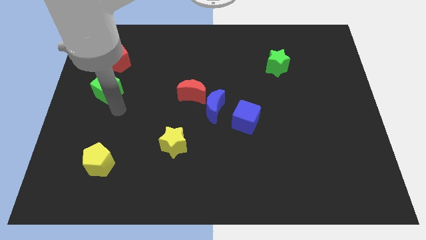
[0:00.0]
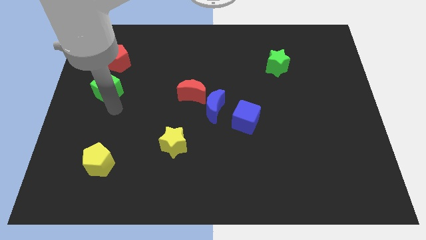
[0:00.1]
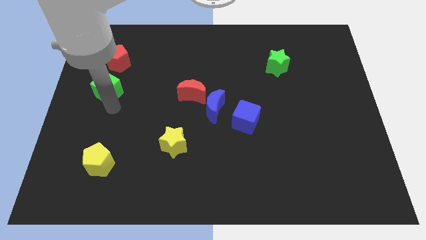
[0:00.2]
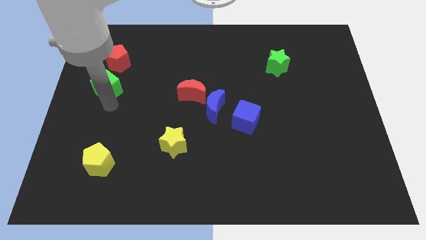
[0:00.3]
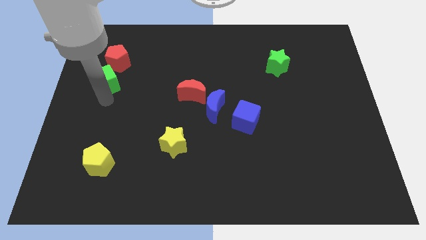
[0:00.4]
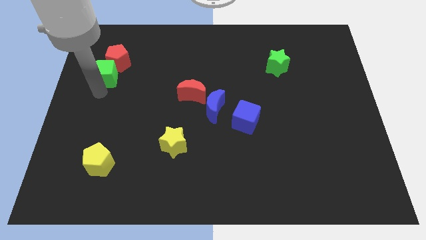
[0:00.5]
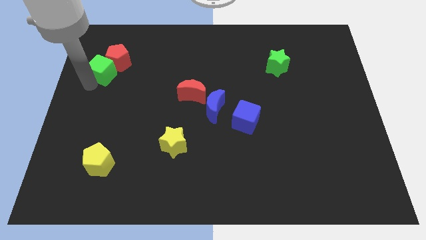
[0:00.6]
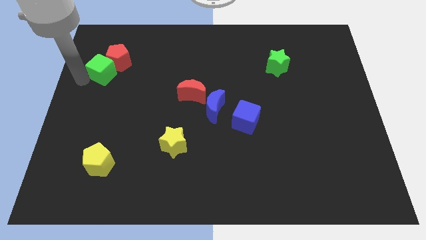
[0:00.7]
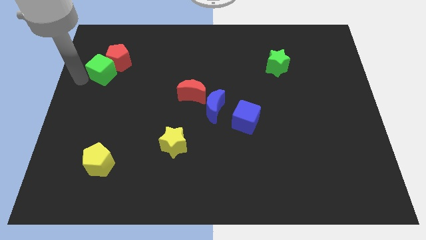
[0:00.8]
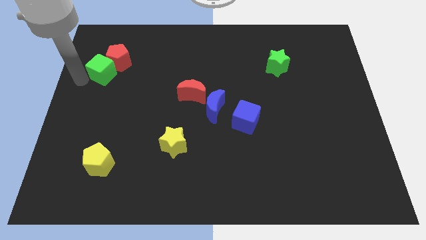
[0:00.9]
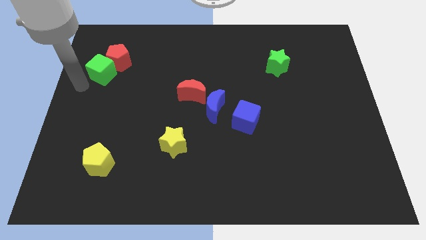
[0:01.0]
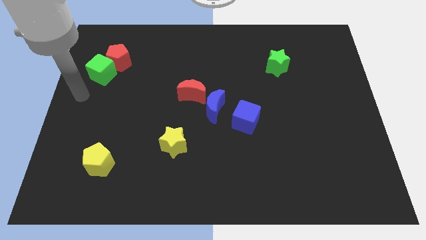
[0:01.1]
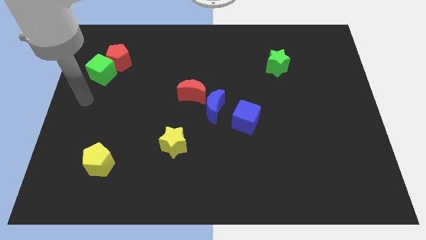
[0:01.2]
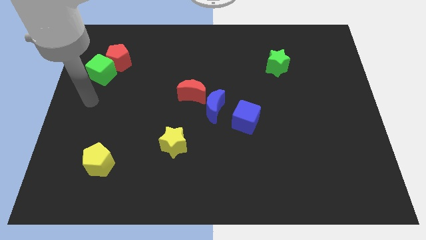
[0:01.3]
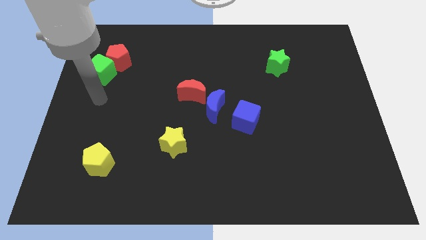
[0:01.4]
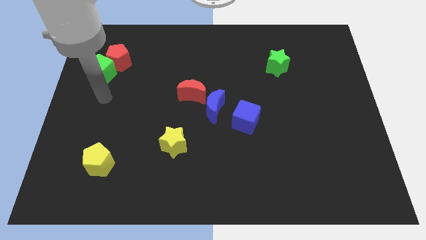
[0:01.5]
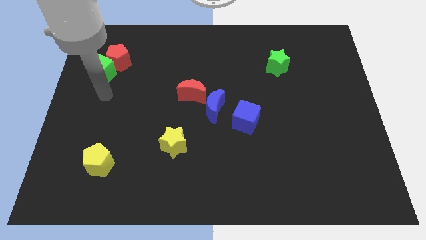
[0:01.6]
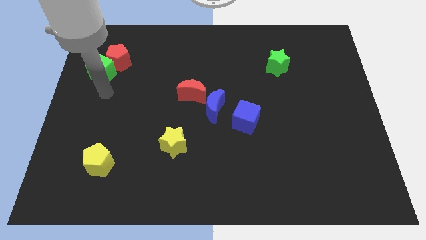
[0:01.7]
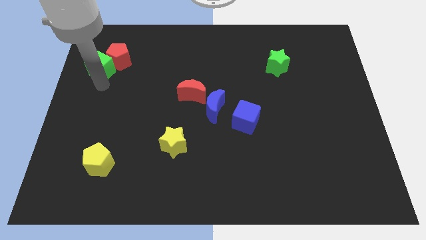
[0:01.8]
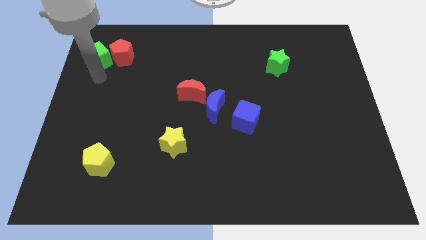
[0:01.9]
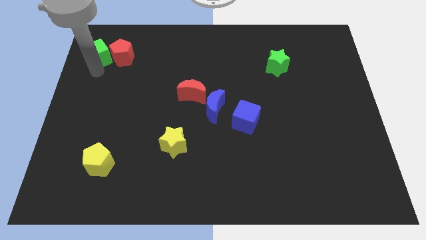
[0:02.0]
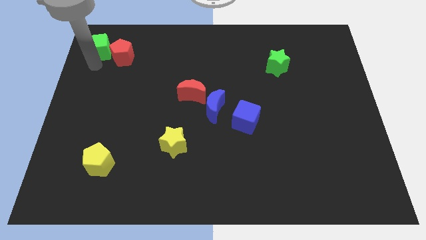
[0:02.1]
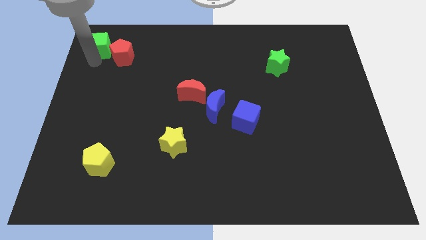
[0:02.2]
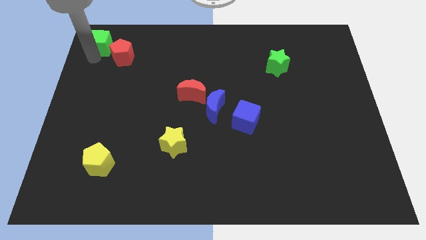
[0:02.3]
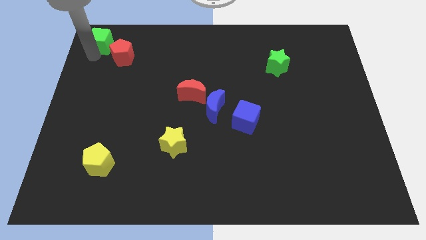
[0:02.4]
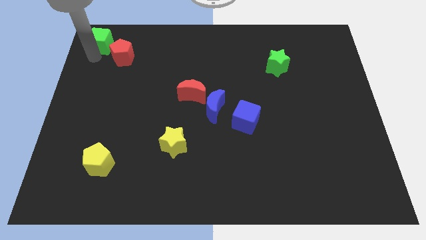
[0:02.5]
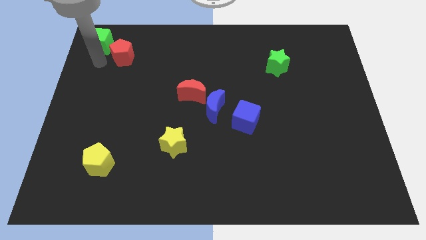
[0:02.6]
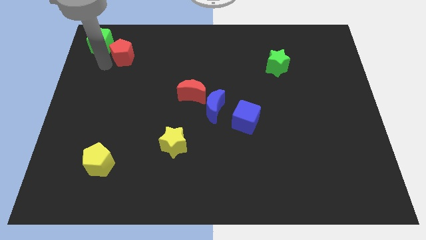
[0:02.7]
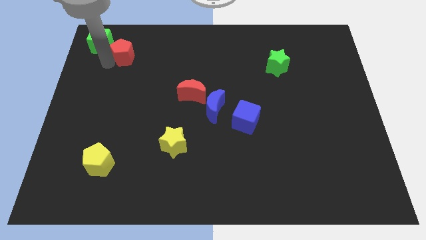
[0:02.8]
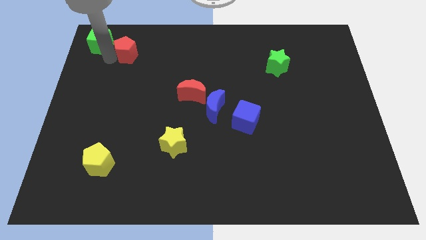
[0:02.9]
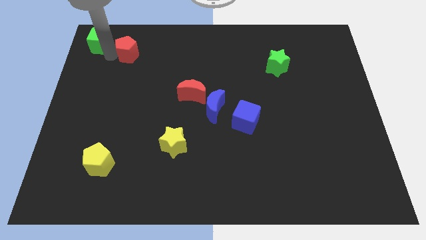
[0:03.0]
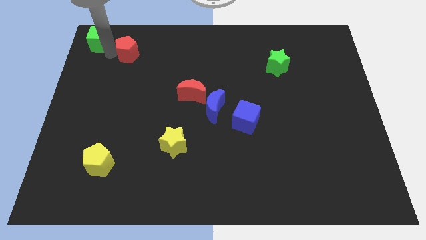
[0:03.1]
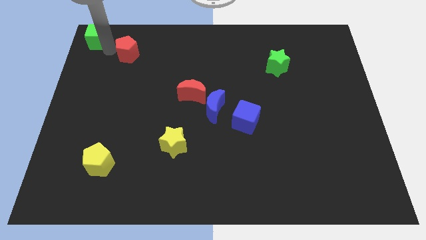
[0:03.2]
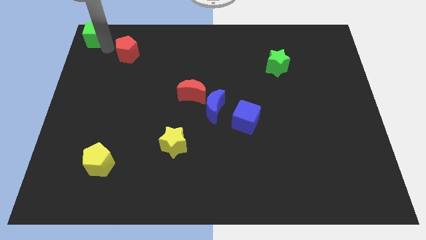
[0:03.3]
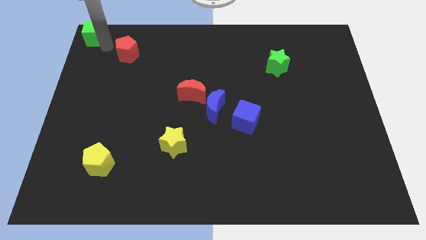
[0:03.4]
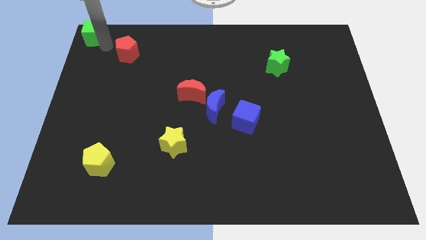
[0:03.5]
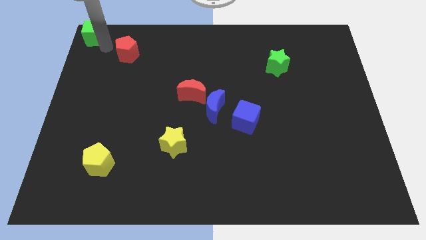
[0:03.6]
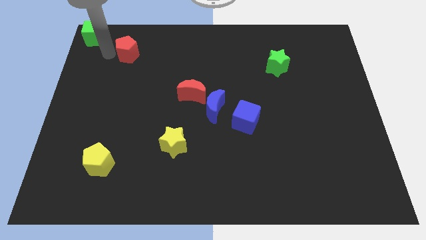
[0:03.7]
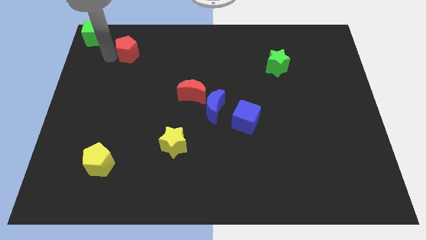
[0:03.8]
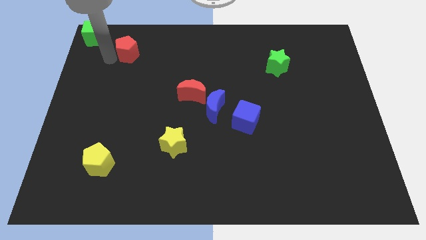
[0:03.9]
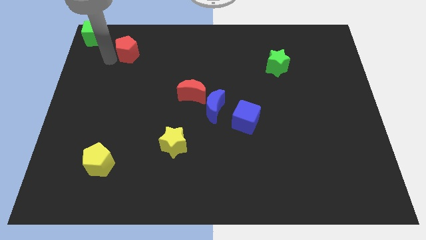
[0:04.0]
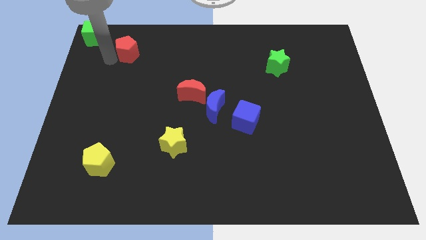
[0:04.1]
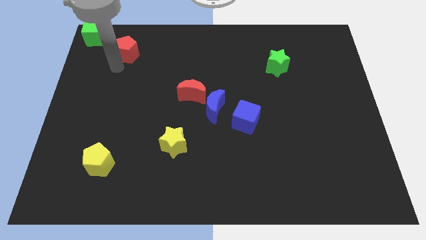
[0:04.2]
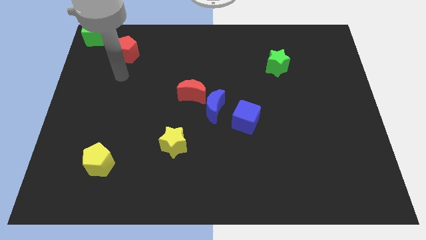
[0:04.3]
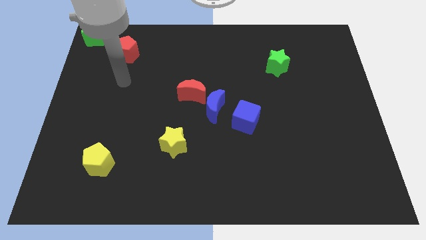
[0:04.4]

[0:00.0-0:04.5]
place the green cube at the top left of the red pentagon

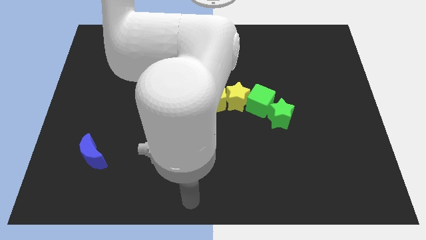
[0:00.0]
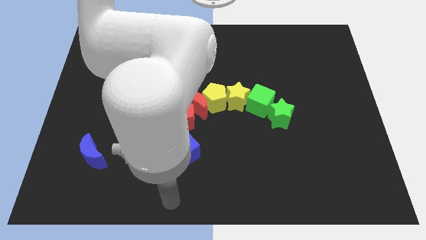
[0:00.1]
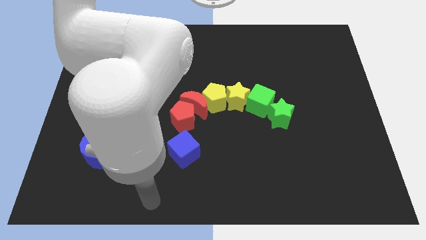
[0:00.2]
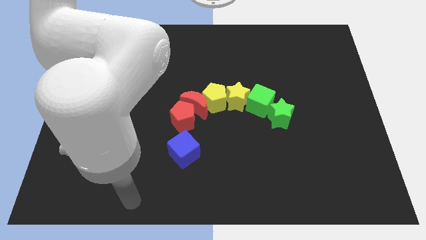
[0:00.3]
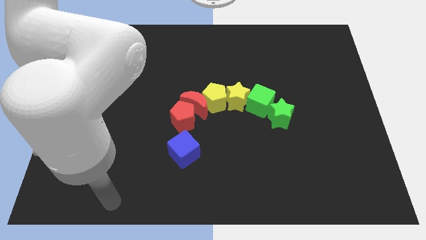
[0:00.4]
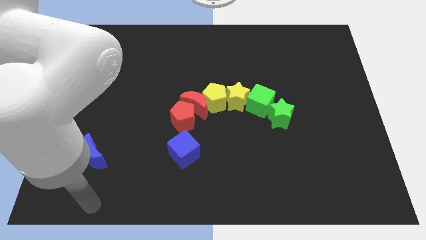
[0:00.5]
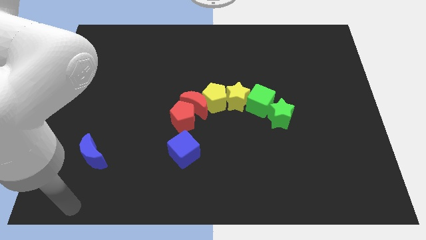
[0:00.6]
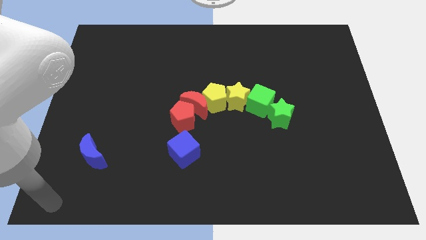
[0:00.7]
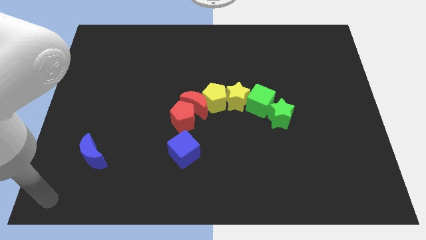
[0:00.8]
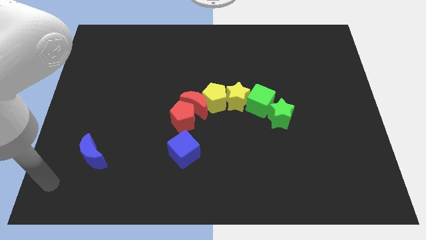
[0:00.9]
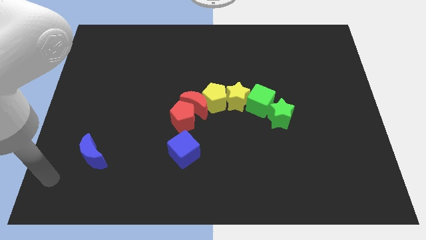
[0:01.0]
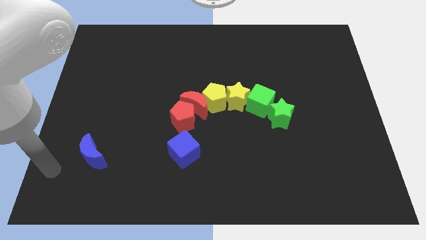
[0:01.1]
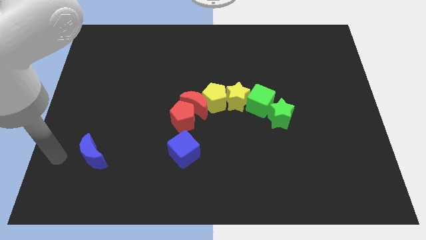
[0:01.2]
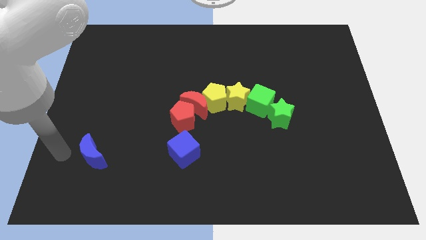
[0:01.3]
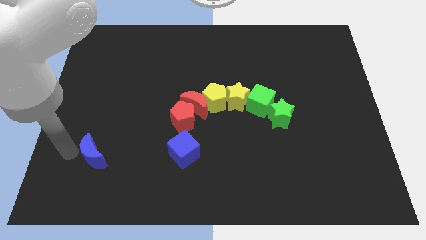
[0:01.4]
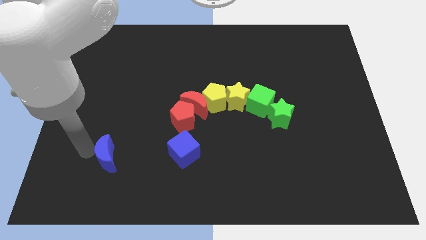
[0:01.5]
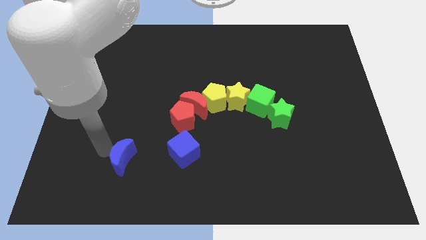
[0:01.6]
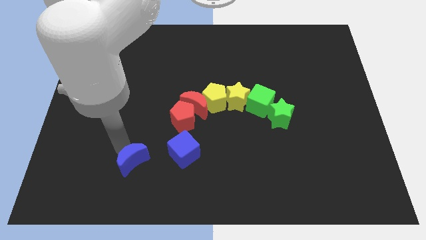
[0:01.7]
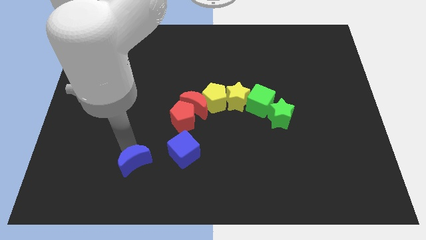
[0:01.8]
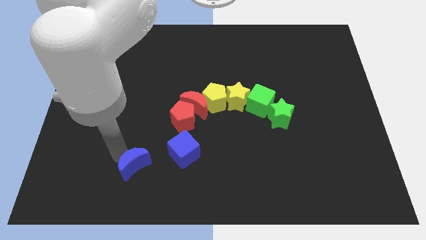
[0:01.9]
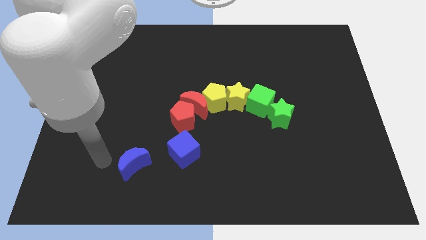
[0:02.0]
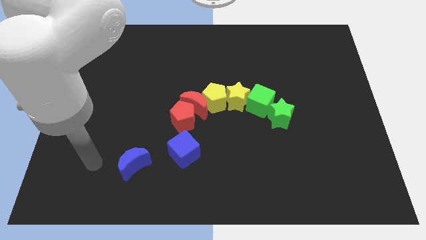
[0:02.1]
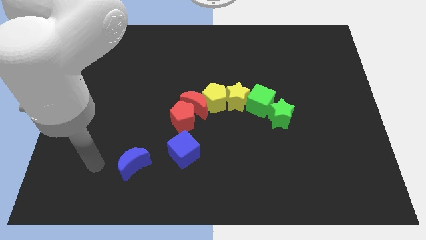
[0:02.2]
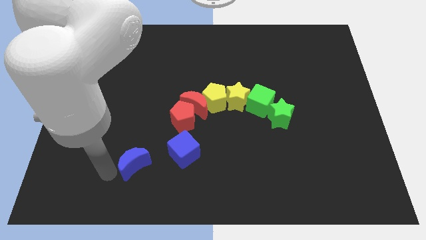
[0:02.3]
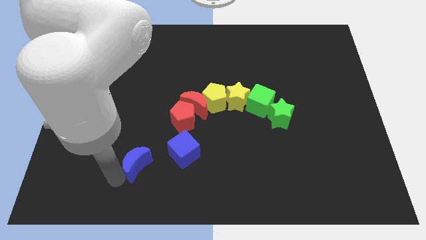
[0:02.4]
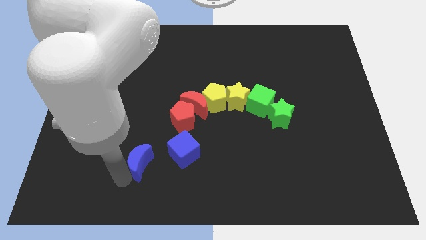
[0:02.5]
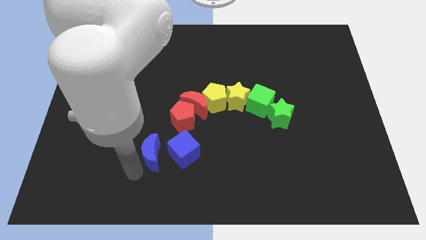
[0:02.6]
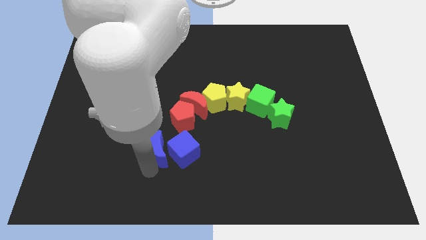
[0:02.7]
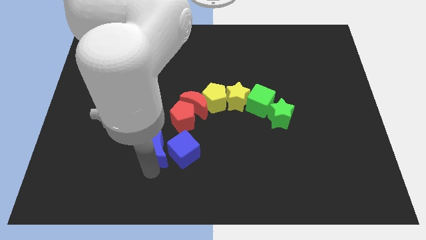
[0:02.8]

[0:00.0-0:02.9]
place the blue moon on the left of the blue cube

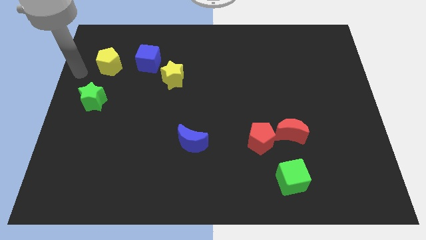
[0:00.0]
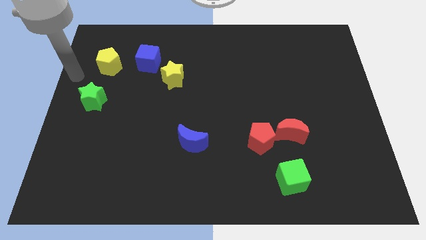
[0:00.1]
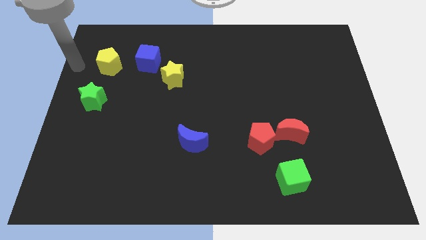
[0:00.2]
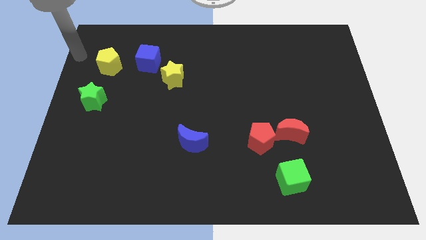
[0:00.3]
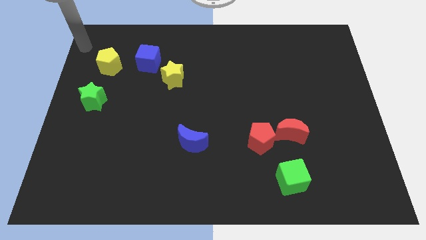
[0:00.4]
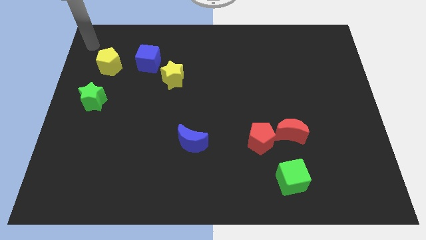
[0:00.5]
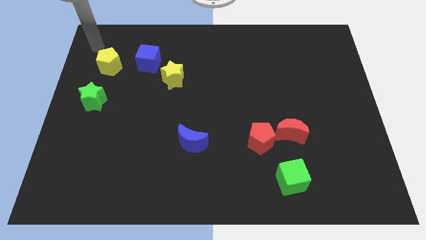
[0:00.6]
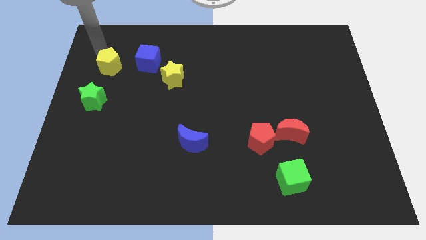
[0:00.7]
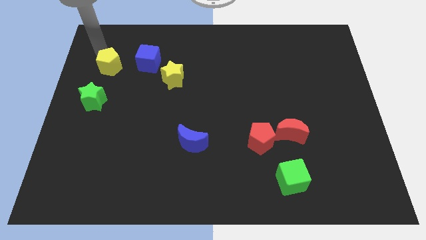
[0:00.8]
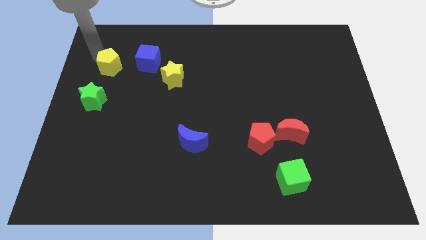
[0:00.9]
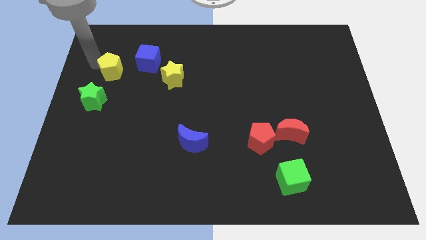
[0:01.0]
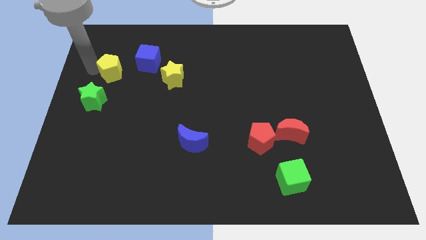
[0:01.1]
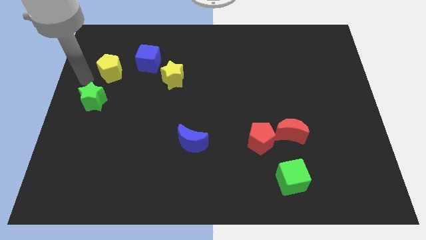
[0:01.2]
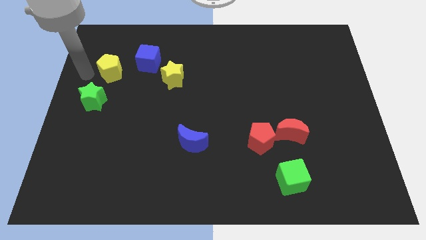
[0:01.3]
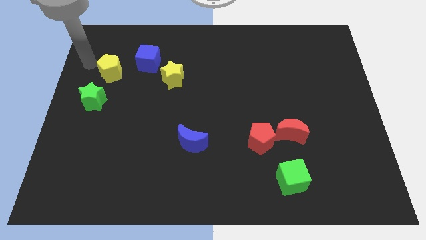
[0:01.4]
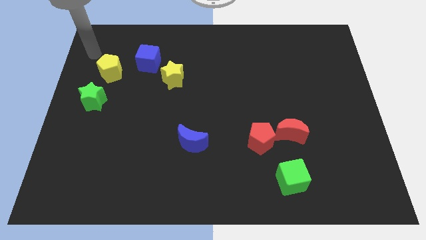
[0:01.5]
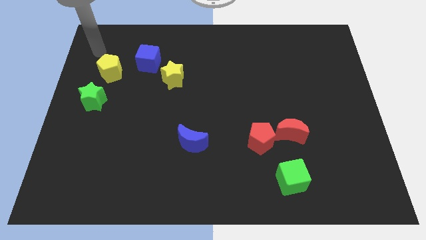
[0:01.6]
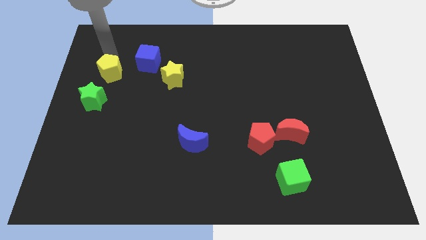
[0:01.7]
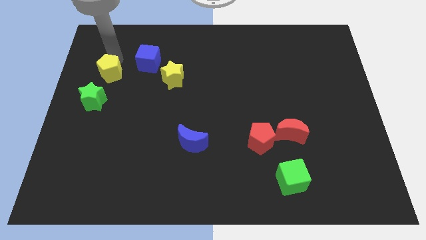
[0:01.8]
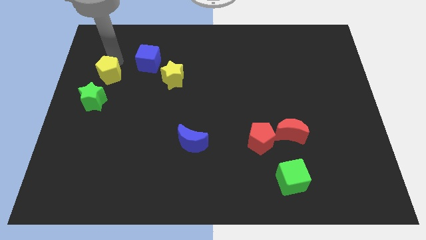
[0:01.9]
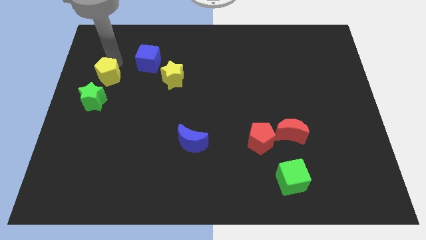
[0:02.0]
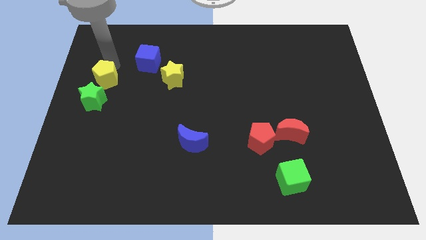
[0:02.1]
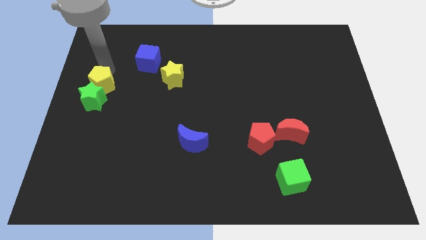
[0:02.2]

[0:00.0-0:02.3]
push yellow pentagon slightly towards down
